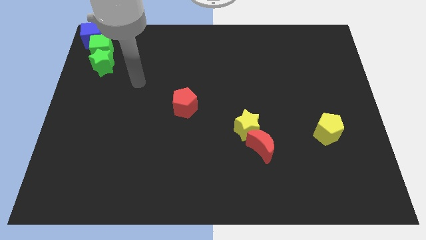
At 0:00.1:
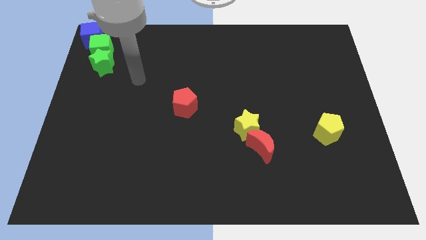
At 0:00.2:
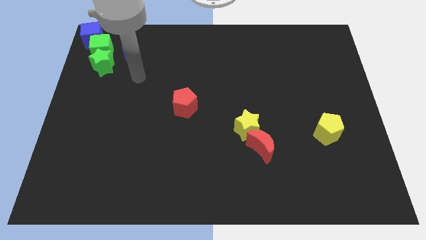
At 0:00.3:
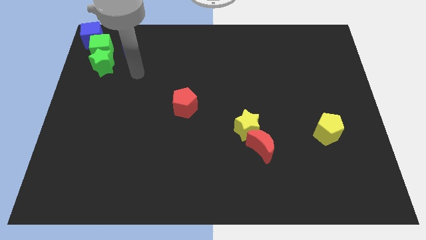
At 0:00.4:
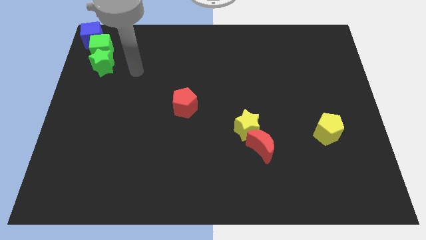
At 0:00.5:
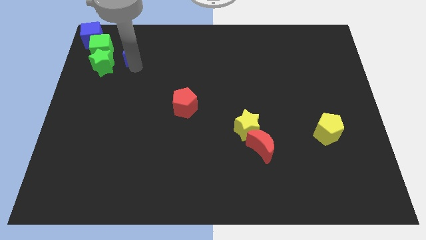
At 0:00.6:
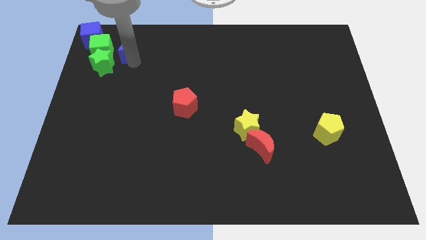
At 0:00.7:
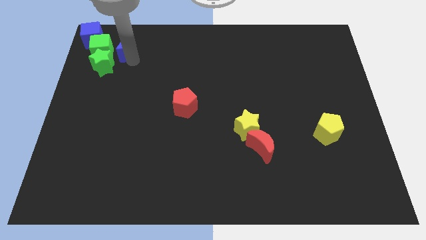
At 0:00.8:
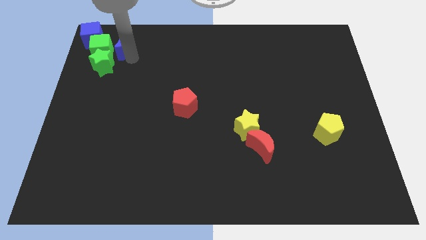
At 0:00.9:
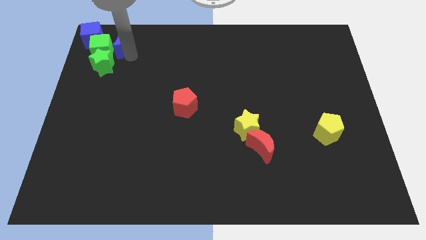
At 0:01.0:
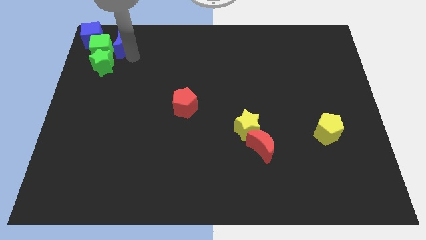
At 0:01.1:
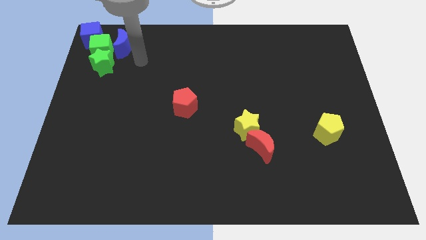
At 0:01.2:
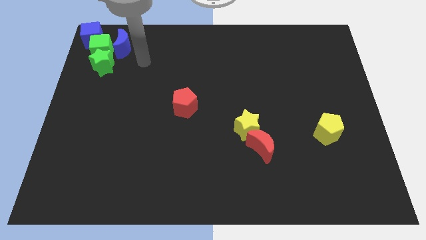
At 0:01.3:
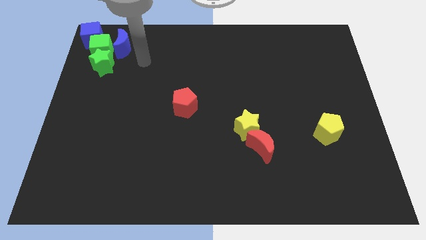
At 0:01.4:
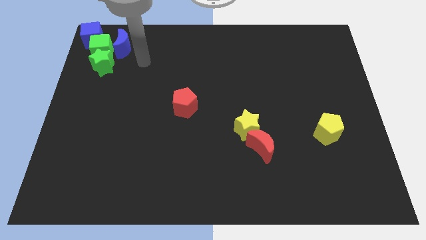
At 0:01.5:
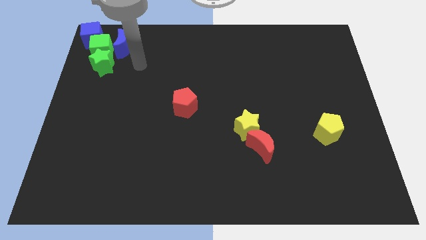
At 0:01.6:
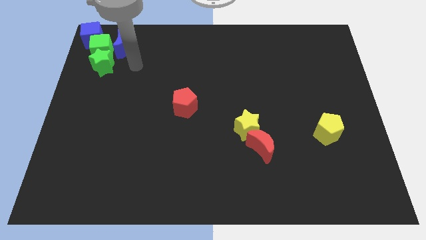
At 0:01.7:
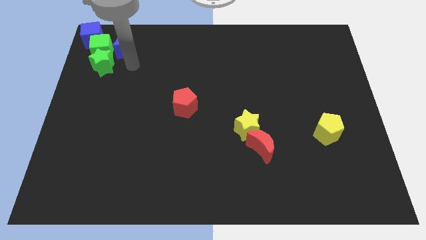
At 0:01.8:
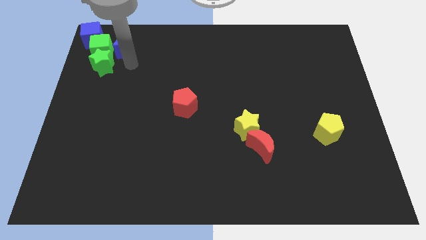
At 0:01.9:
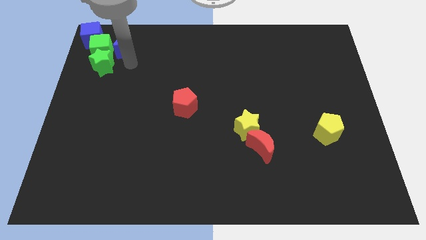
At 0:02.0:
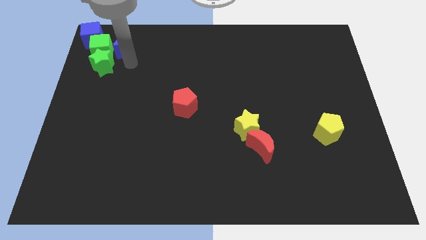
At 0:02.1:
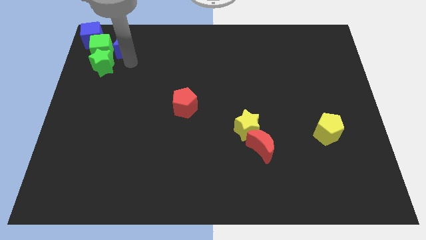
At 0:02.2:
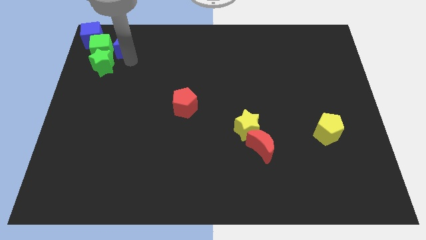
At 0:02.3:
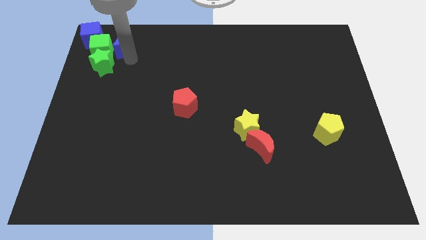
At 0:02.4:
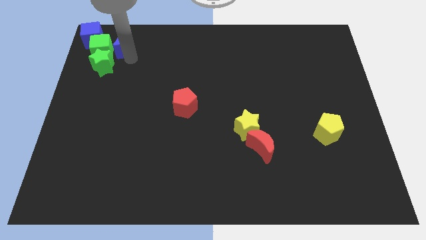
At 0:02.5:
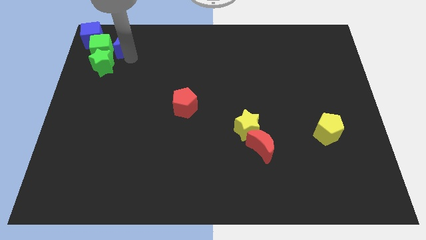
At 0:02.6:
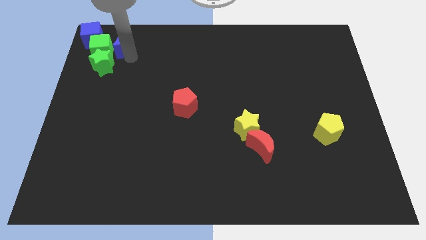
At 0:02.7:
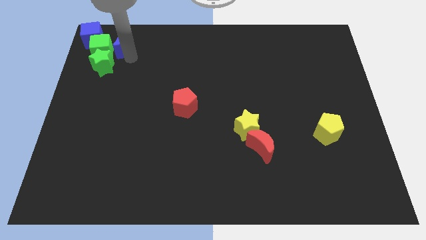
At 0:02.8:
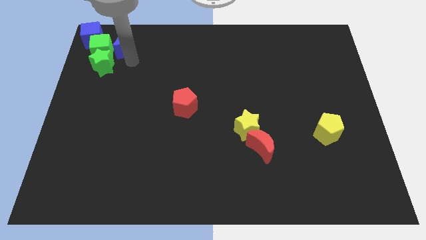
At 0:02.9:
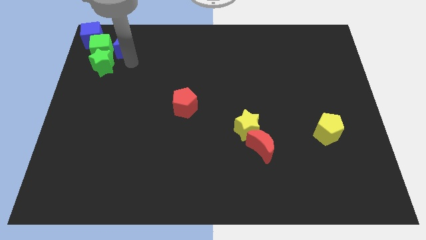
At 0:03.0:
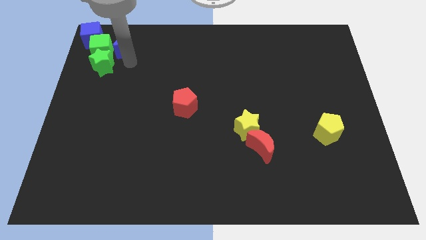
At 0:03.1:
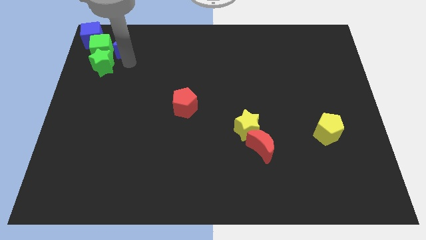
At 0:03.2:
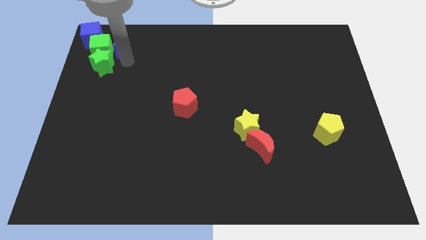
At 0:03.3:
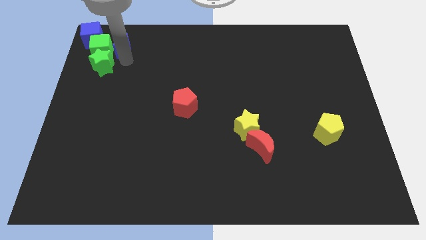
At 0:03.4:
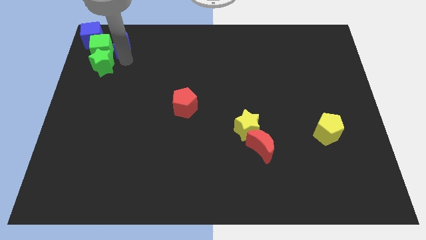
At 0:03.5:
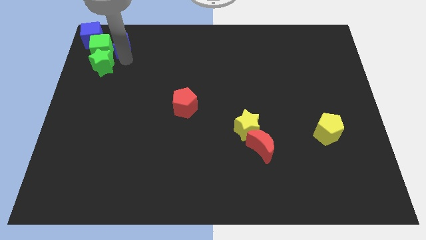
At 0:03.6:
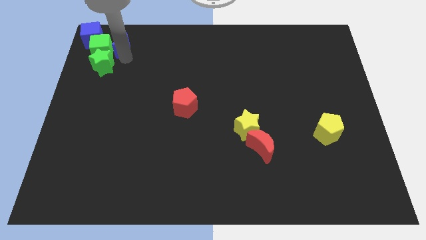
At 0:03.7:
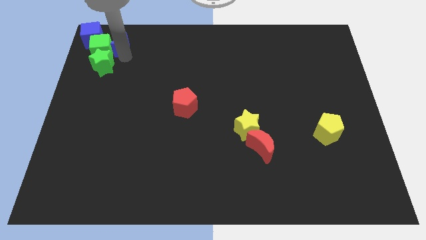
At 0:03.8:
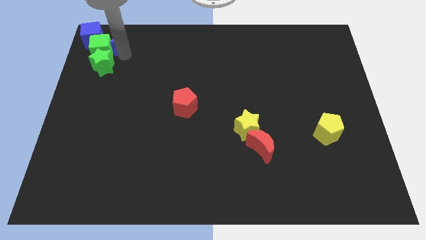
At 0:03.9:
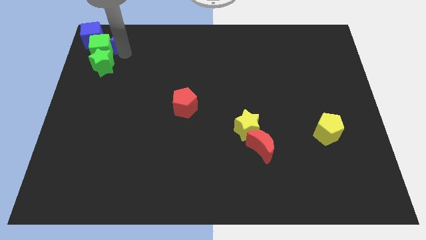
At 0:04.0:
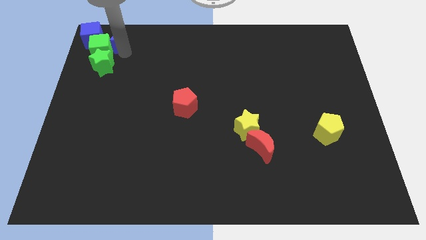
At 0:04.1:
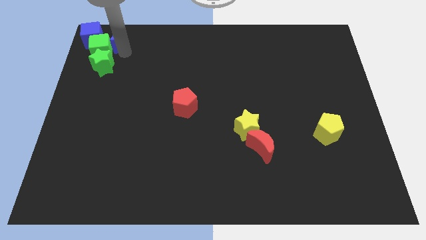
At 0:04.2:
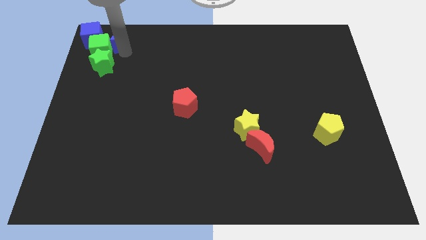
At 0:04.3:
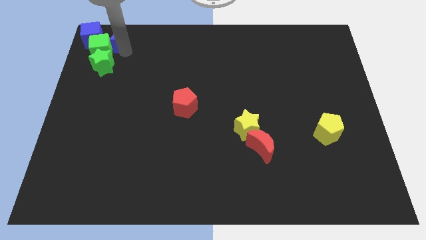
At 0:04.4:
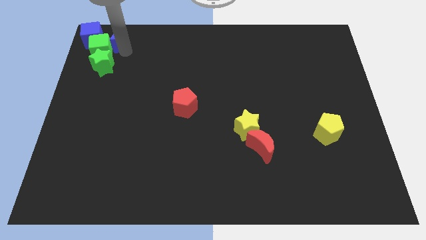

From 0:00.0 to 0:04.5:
push the blue crescent into the green cube

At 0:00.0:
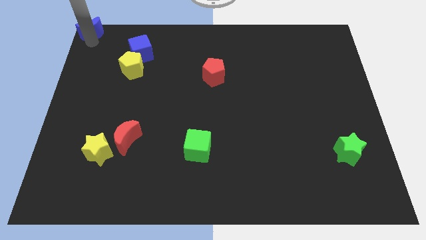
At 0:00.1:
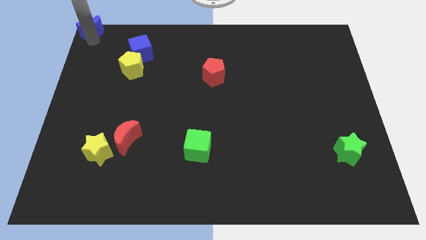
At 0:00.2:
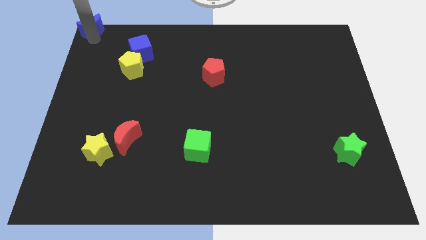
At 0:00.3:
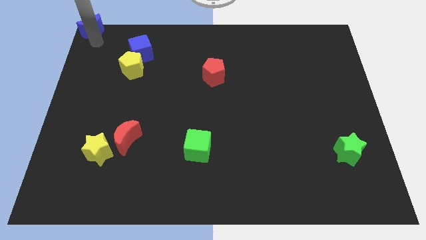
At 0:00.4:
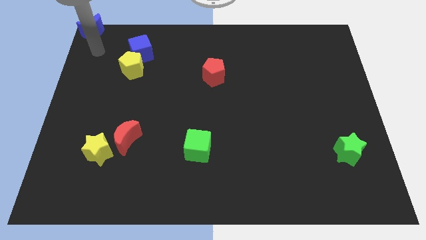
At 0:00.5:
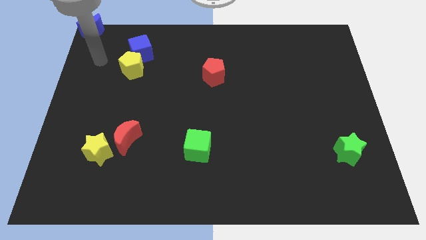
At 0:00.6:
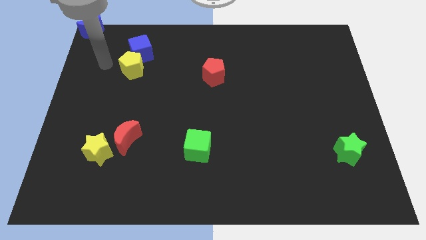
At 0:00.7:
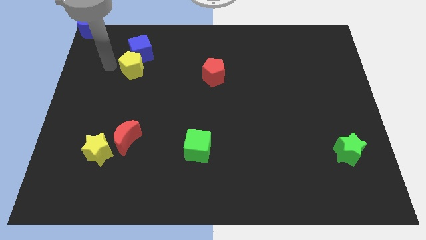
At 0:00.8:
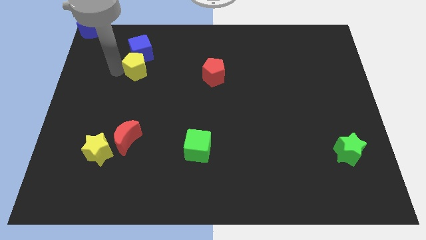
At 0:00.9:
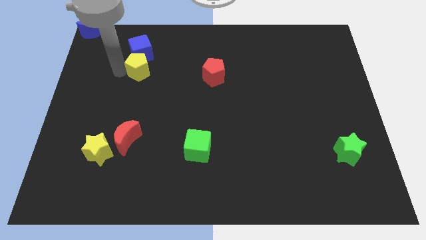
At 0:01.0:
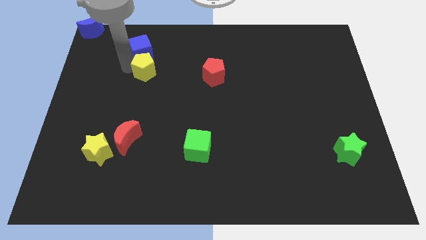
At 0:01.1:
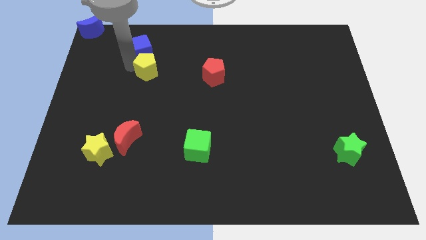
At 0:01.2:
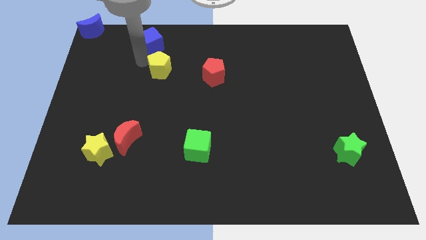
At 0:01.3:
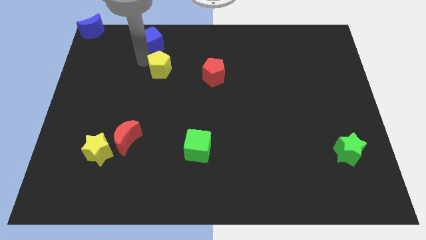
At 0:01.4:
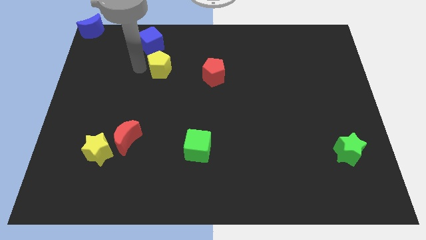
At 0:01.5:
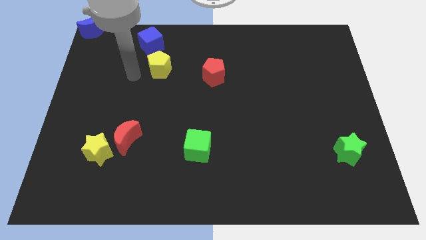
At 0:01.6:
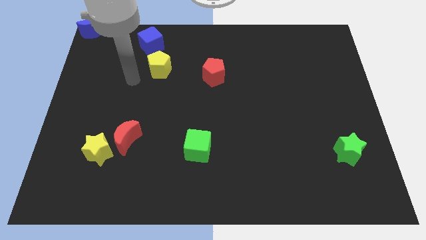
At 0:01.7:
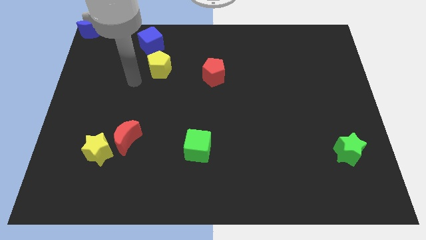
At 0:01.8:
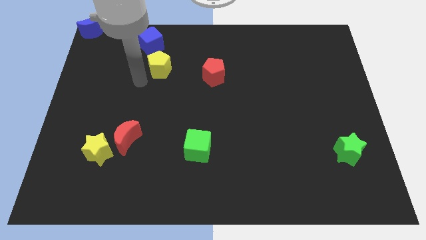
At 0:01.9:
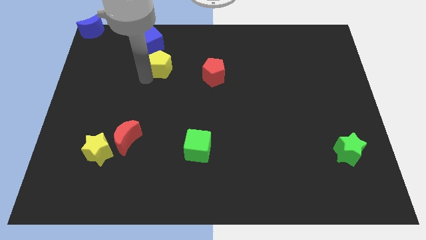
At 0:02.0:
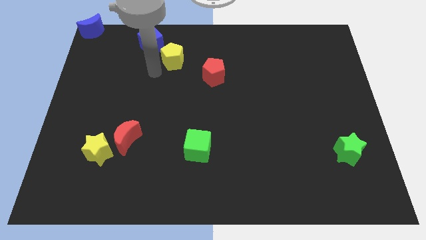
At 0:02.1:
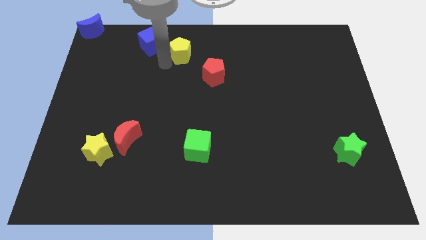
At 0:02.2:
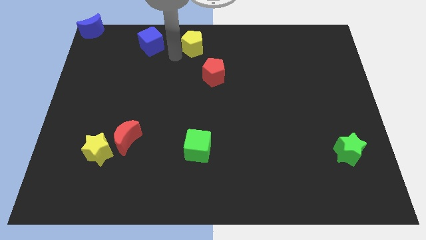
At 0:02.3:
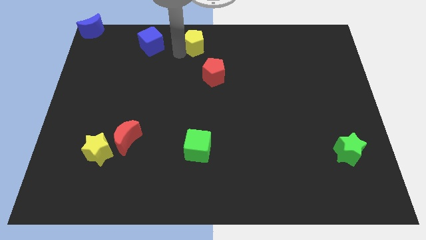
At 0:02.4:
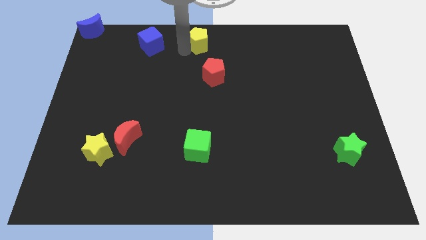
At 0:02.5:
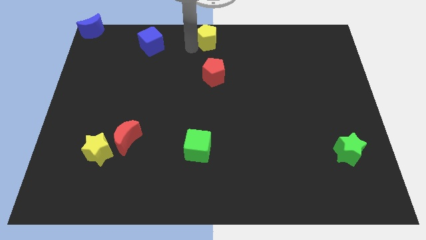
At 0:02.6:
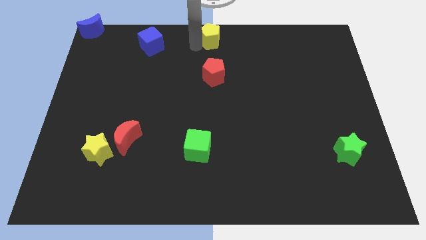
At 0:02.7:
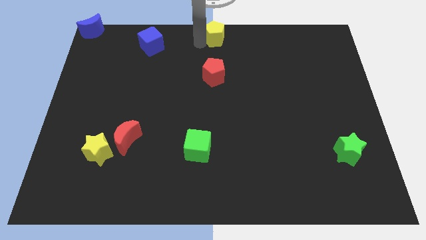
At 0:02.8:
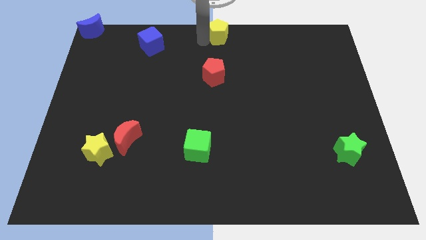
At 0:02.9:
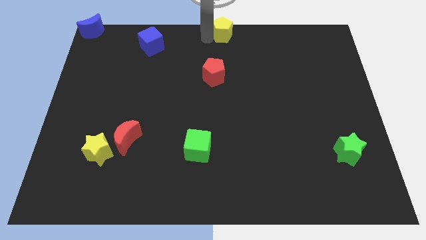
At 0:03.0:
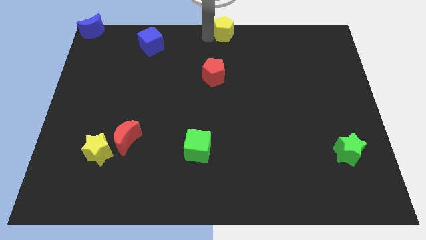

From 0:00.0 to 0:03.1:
push yellow pentagon above red pentagon

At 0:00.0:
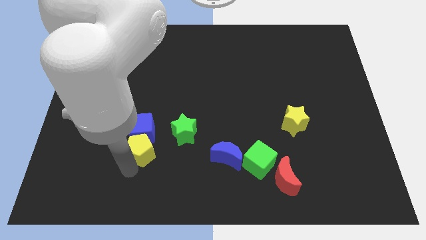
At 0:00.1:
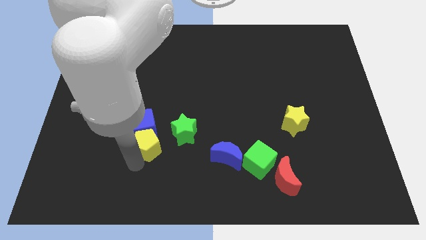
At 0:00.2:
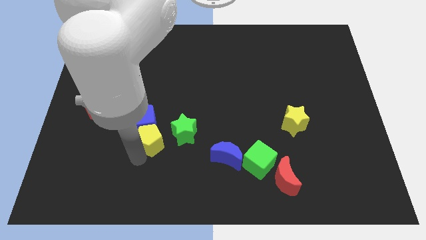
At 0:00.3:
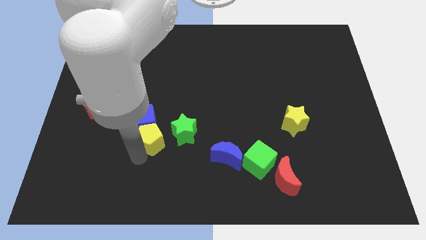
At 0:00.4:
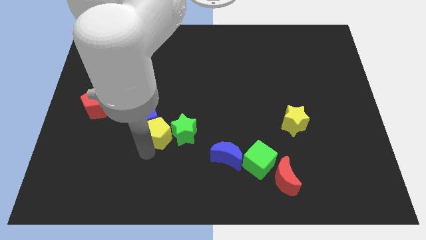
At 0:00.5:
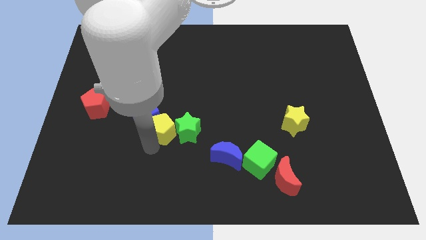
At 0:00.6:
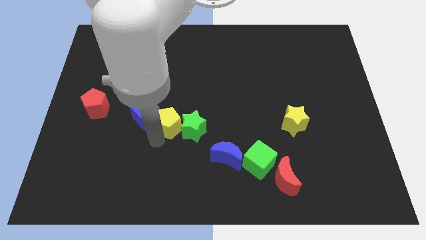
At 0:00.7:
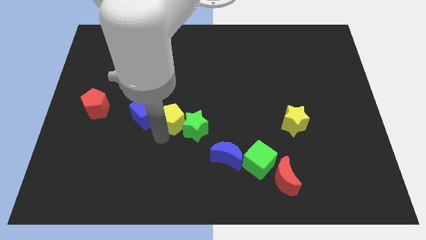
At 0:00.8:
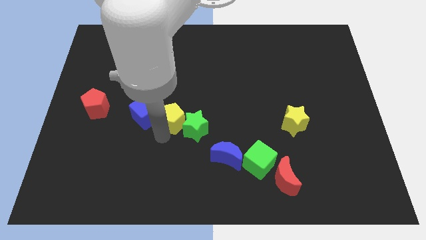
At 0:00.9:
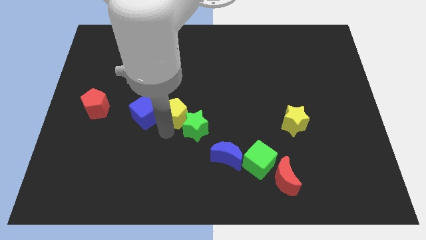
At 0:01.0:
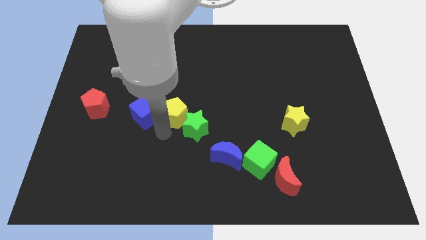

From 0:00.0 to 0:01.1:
place the yellow pentagon in between the green star and blue cube
